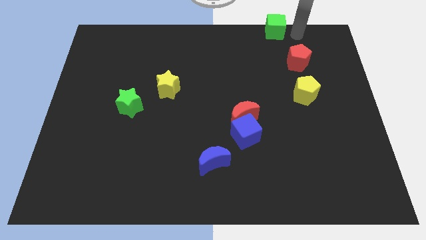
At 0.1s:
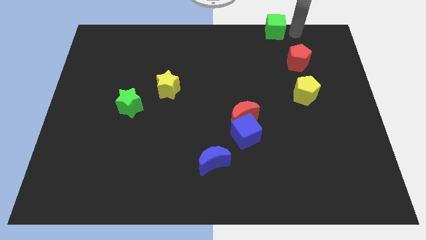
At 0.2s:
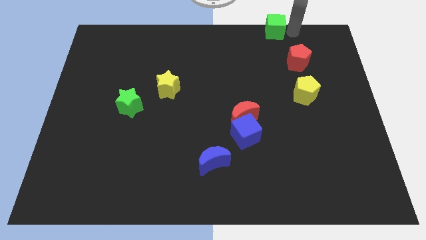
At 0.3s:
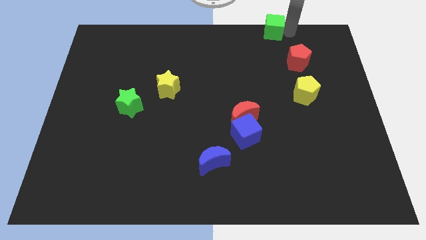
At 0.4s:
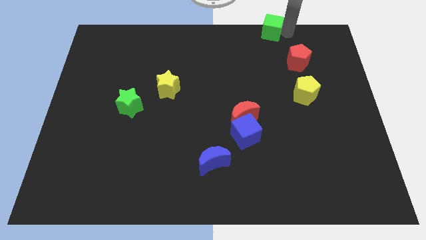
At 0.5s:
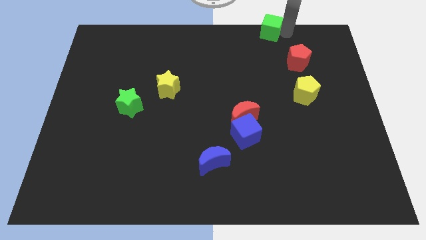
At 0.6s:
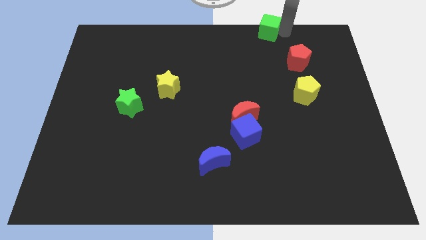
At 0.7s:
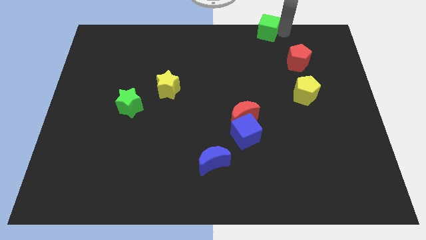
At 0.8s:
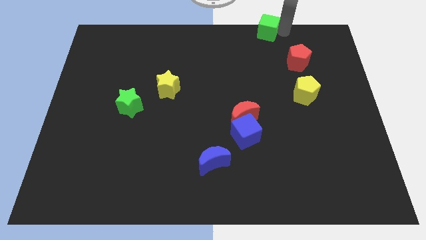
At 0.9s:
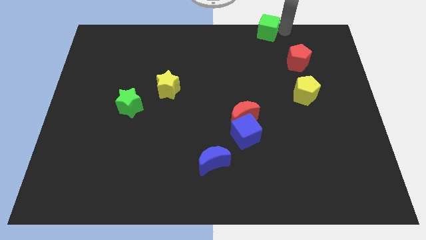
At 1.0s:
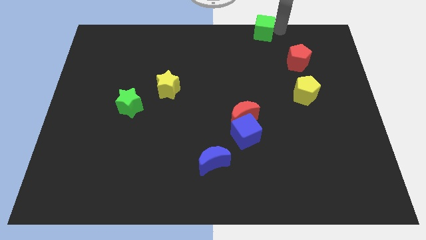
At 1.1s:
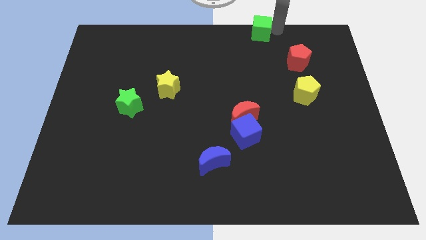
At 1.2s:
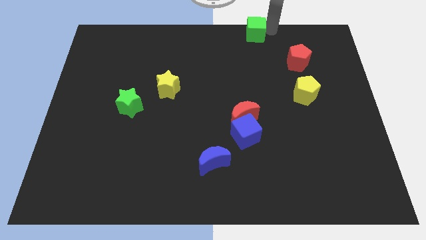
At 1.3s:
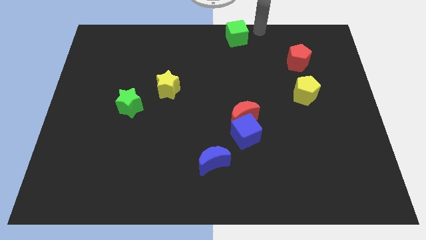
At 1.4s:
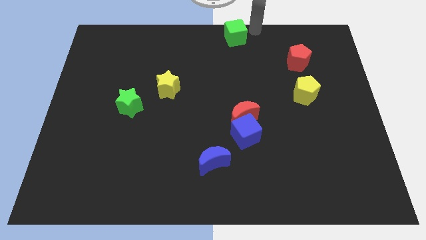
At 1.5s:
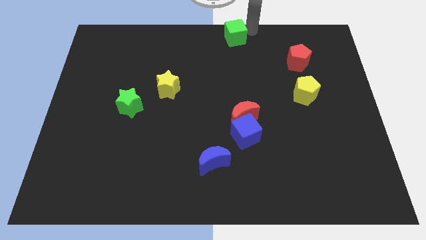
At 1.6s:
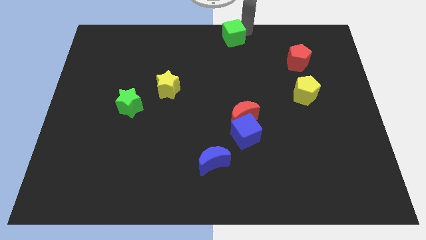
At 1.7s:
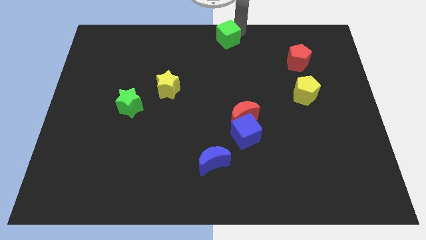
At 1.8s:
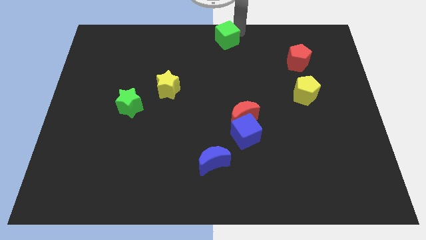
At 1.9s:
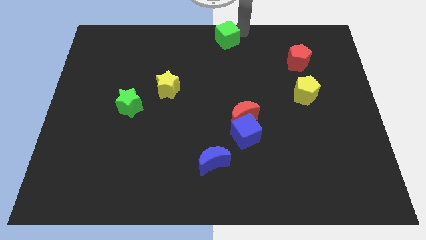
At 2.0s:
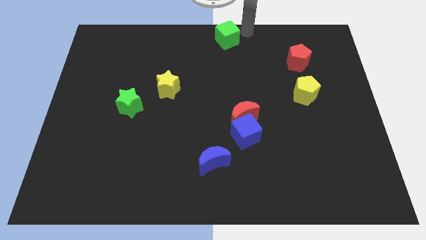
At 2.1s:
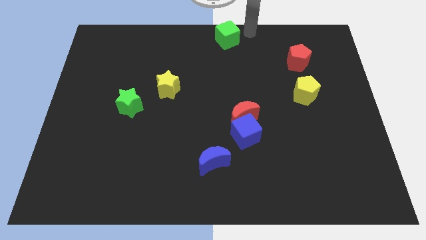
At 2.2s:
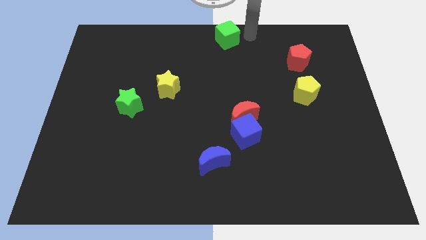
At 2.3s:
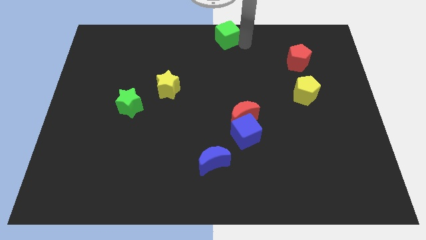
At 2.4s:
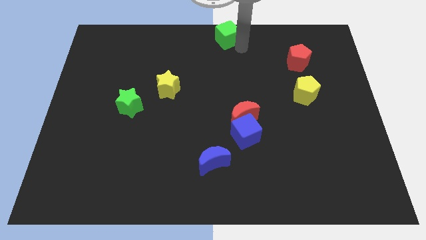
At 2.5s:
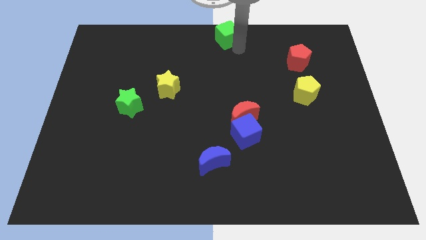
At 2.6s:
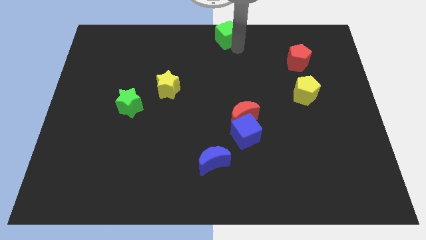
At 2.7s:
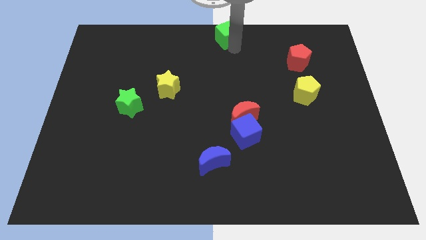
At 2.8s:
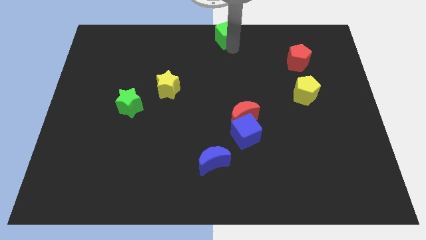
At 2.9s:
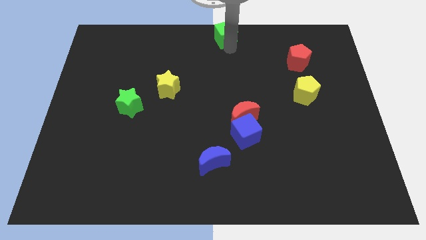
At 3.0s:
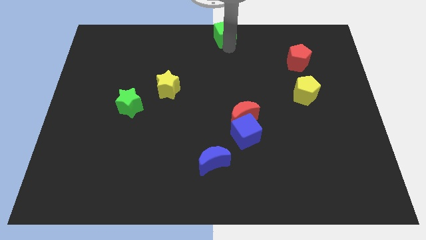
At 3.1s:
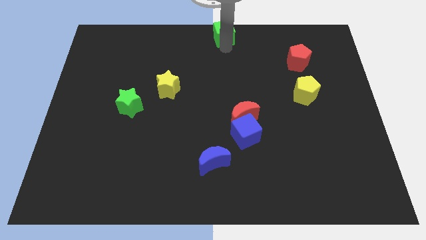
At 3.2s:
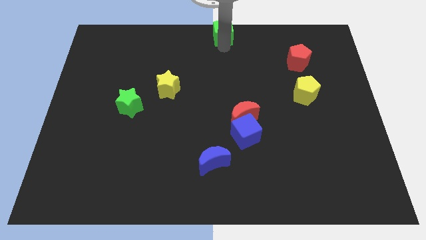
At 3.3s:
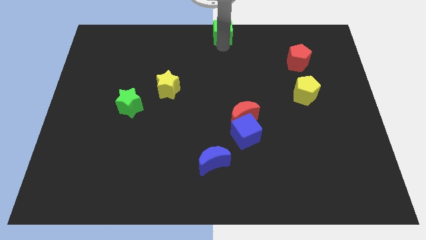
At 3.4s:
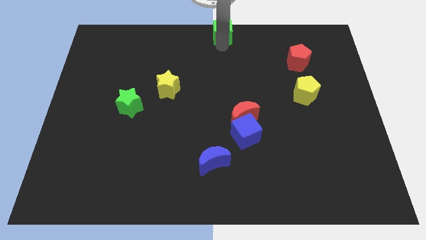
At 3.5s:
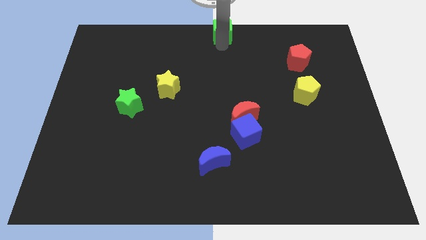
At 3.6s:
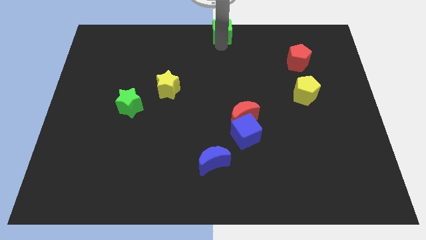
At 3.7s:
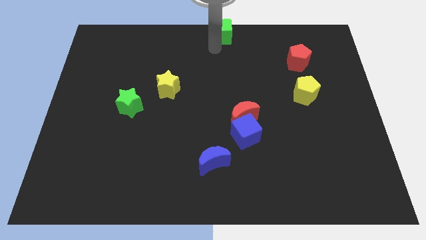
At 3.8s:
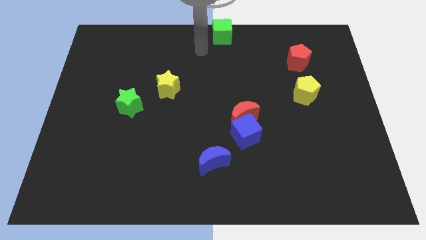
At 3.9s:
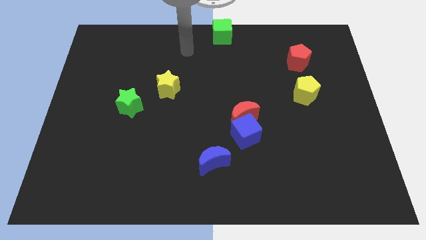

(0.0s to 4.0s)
move the green cube to the top center of the board

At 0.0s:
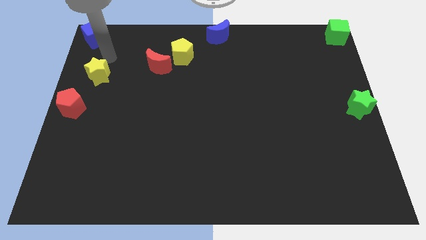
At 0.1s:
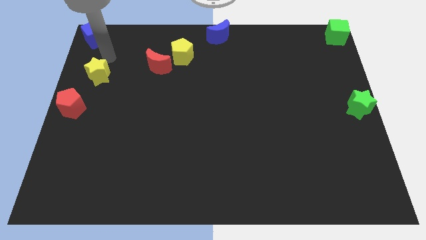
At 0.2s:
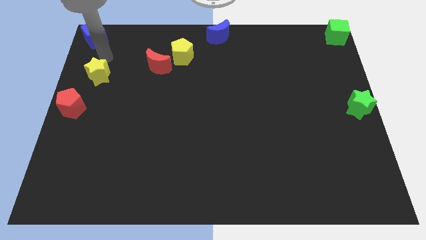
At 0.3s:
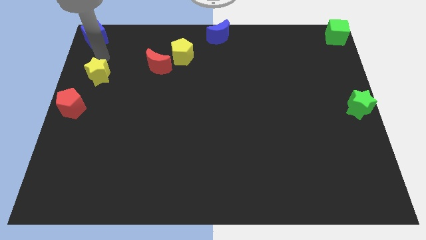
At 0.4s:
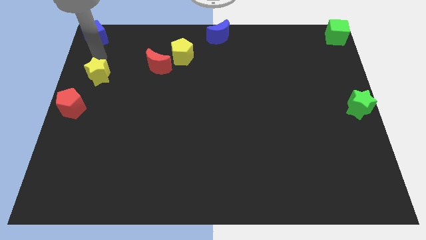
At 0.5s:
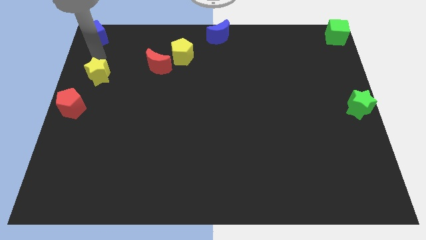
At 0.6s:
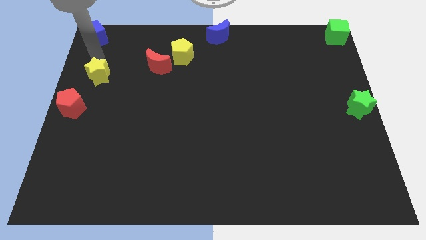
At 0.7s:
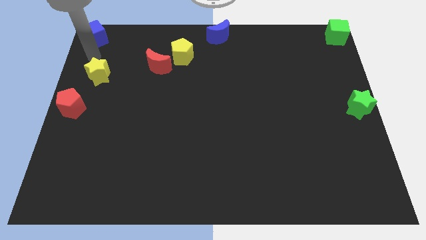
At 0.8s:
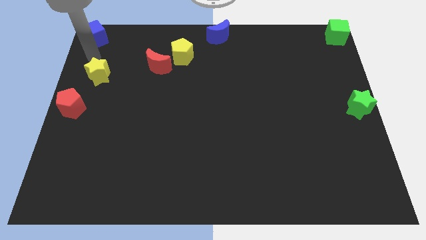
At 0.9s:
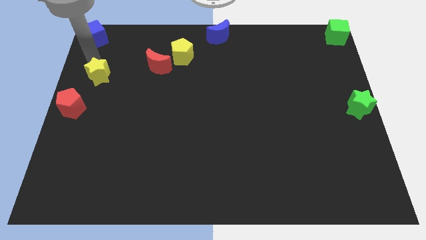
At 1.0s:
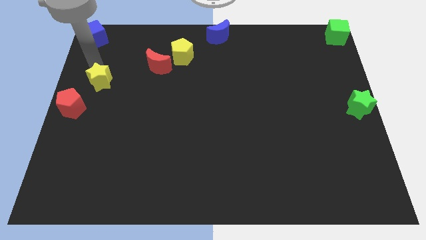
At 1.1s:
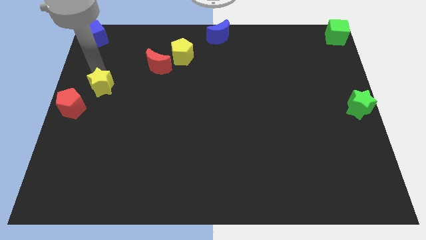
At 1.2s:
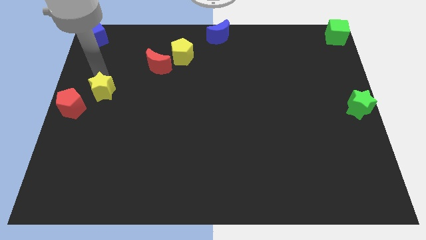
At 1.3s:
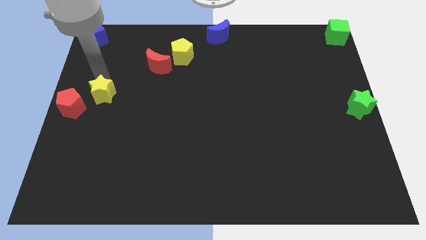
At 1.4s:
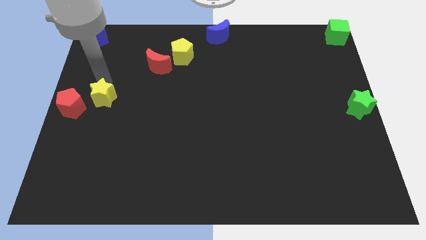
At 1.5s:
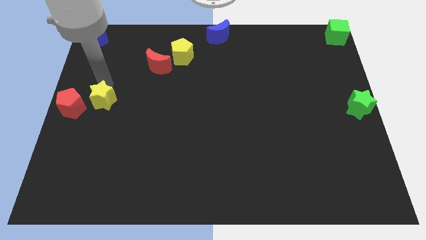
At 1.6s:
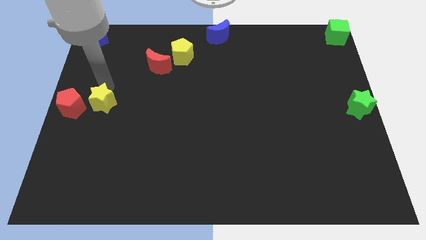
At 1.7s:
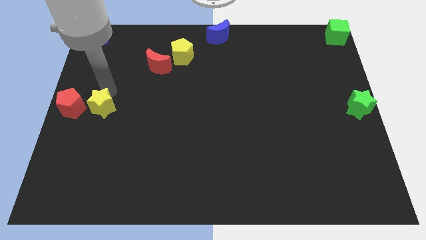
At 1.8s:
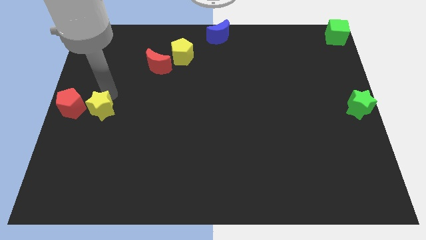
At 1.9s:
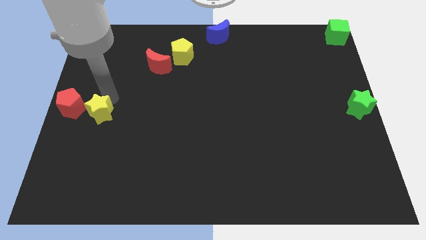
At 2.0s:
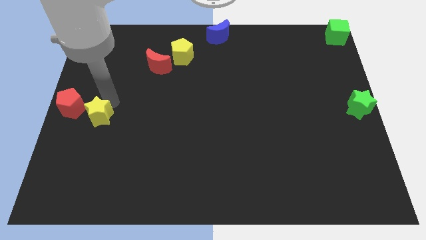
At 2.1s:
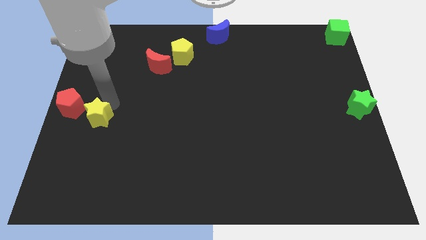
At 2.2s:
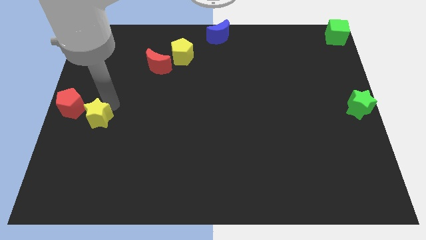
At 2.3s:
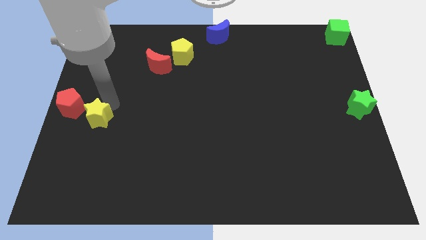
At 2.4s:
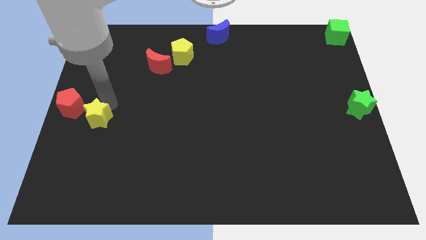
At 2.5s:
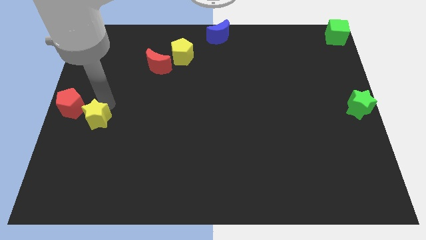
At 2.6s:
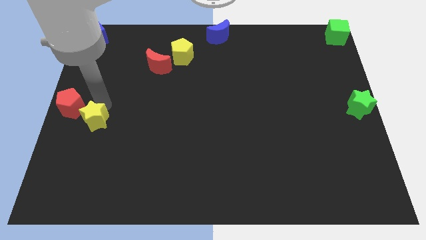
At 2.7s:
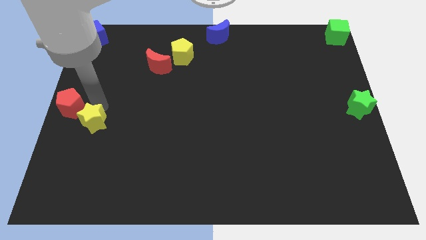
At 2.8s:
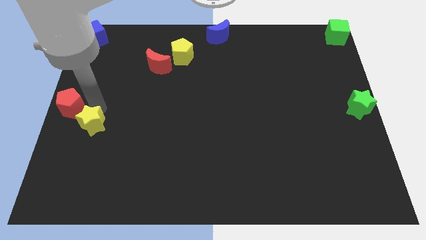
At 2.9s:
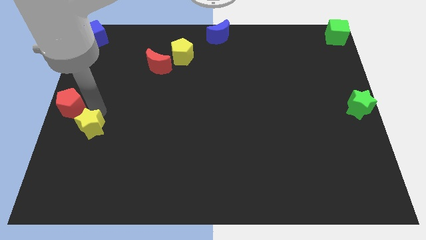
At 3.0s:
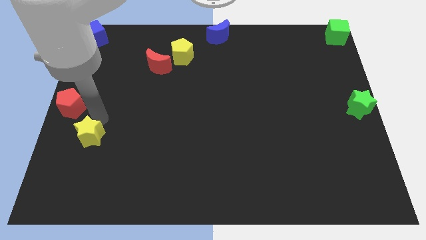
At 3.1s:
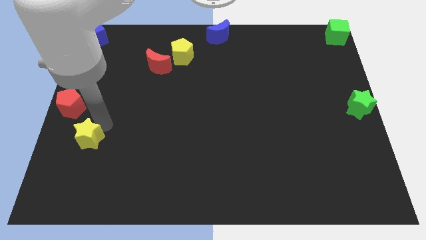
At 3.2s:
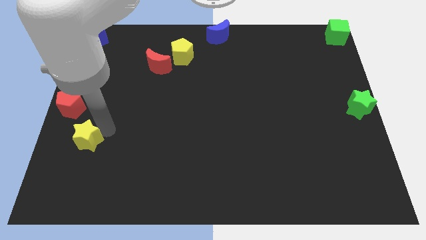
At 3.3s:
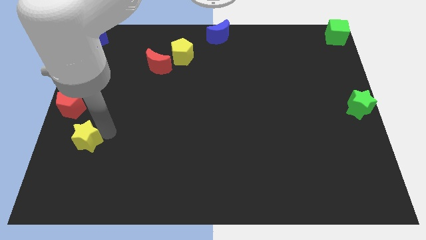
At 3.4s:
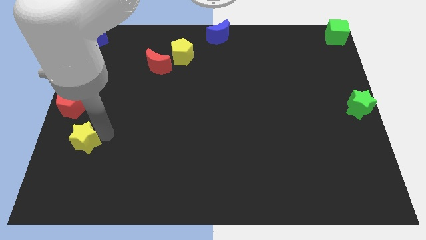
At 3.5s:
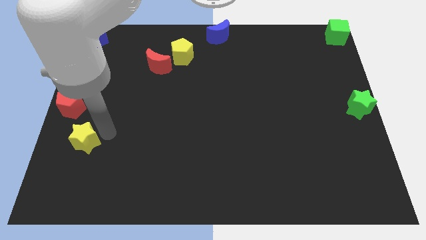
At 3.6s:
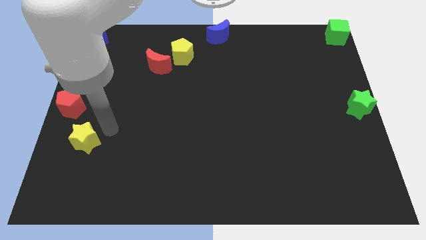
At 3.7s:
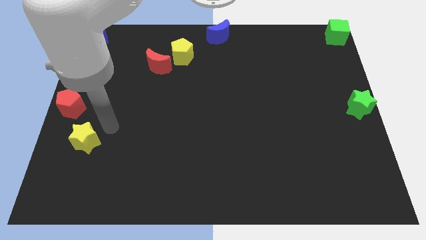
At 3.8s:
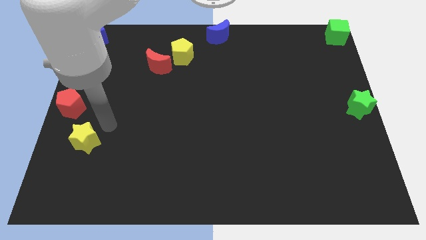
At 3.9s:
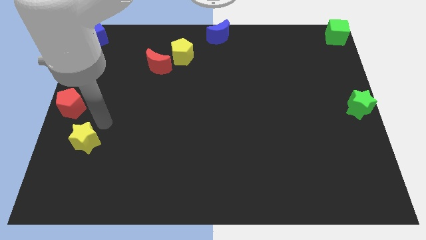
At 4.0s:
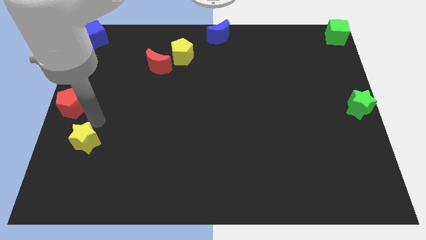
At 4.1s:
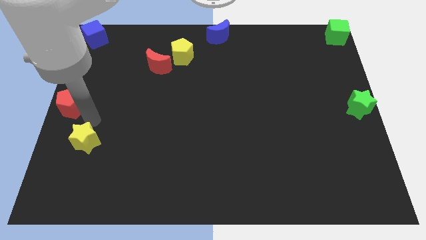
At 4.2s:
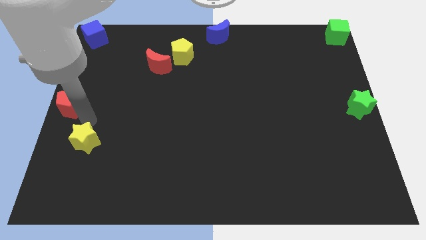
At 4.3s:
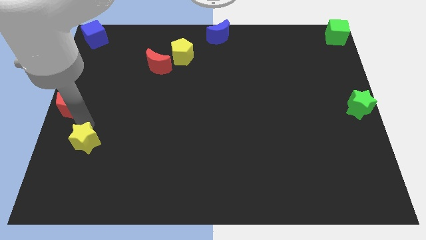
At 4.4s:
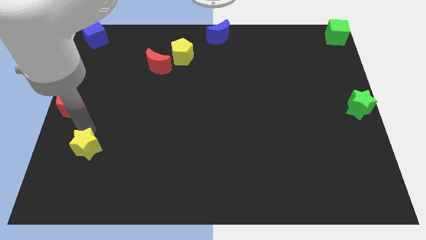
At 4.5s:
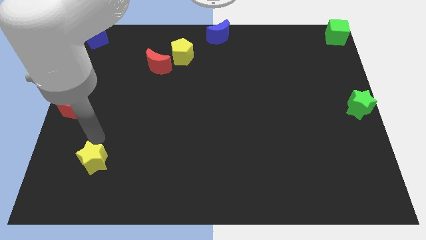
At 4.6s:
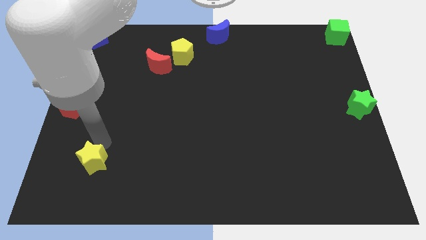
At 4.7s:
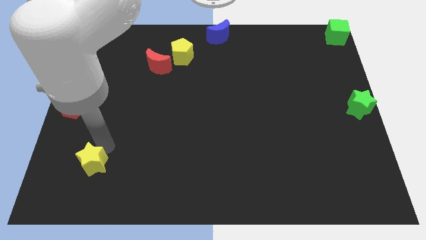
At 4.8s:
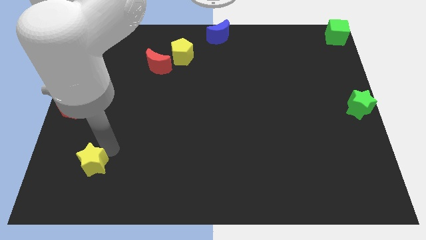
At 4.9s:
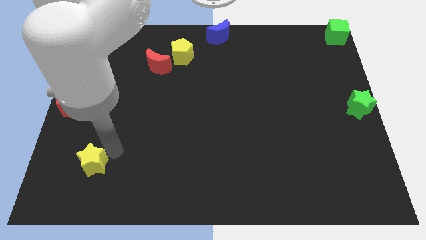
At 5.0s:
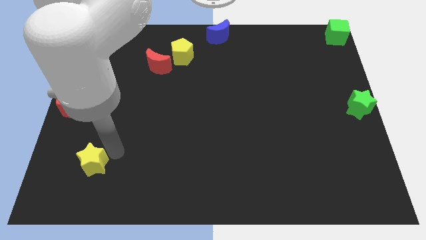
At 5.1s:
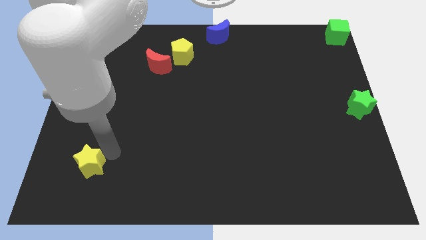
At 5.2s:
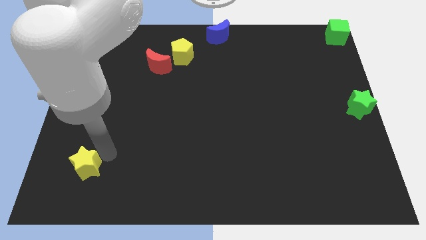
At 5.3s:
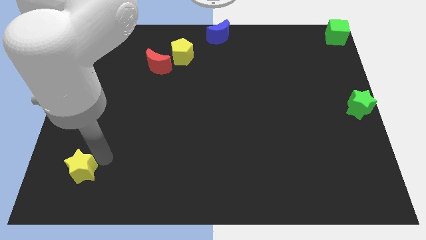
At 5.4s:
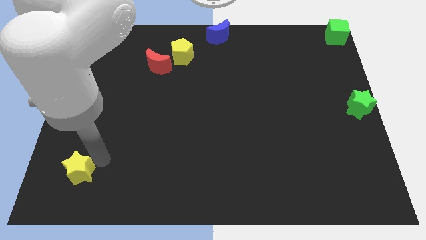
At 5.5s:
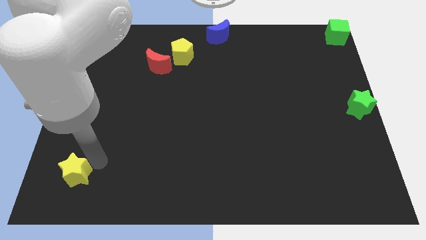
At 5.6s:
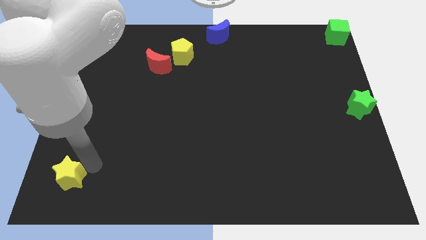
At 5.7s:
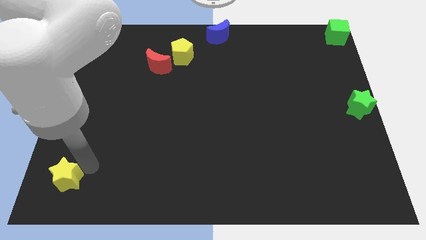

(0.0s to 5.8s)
slide the yellow star towards the bottom left of the board
